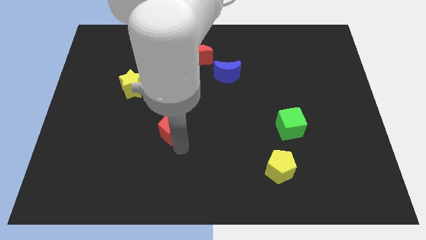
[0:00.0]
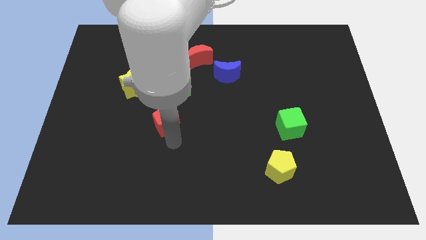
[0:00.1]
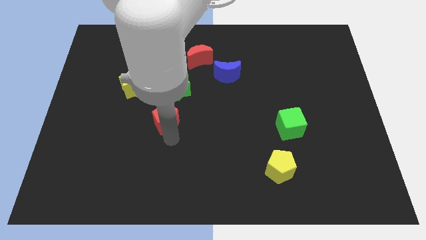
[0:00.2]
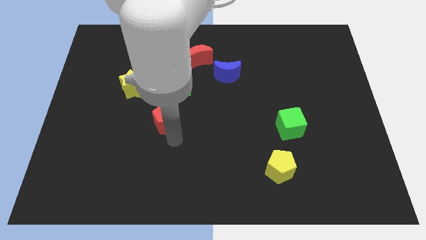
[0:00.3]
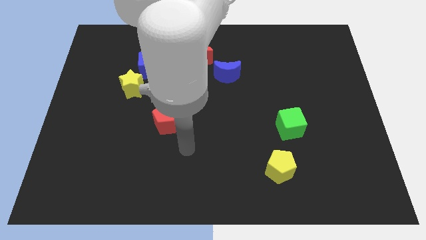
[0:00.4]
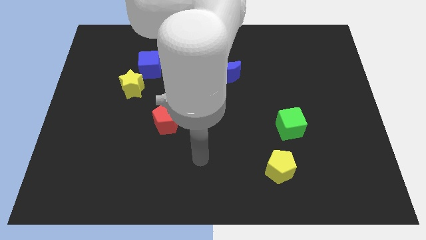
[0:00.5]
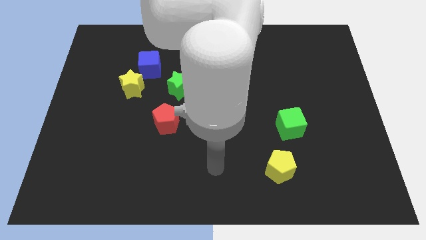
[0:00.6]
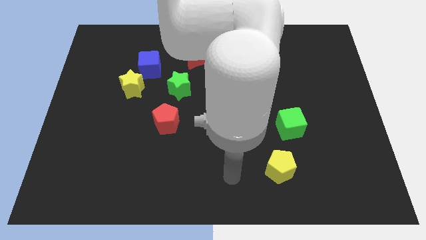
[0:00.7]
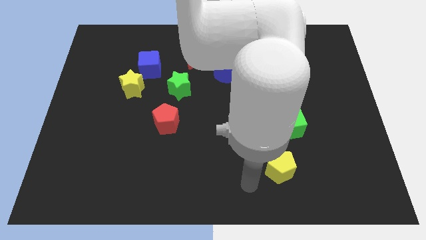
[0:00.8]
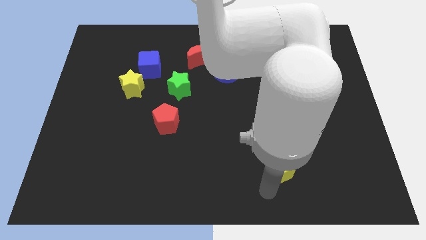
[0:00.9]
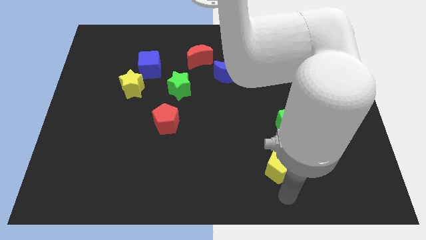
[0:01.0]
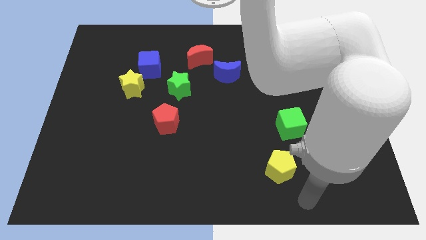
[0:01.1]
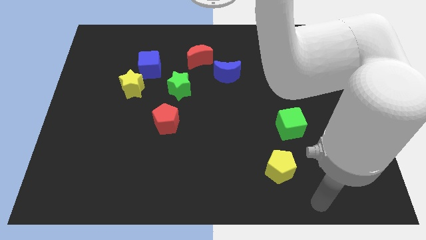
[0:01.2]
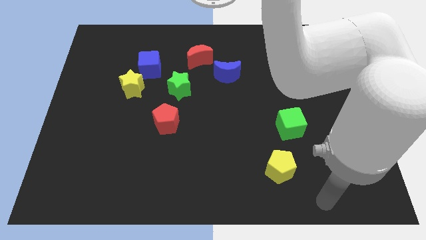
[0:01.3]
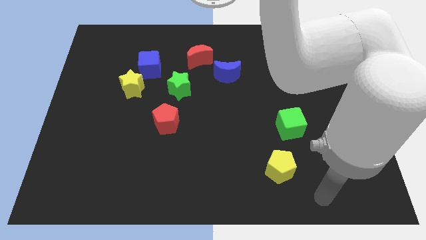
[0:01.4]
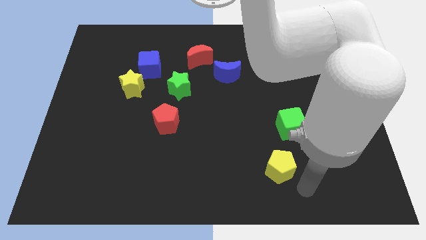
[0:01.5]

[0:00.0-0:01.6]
place the arm near the yellow pentagon

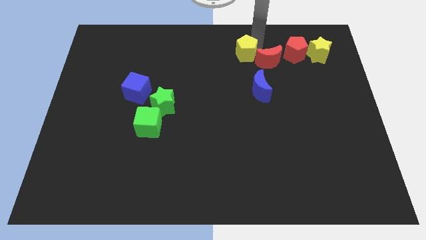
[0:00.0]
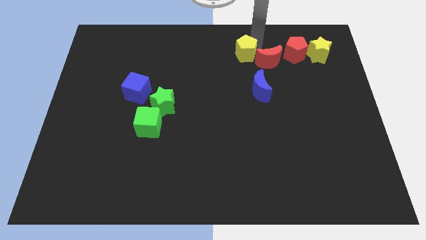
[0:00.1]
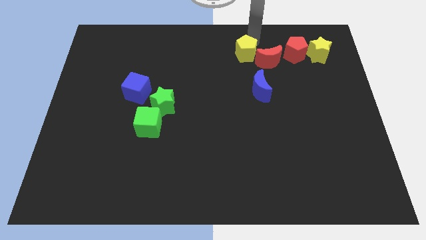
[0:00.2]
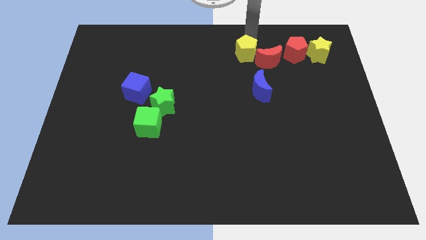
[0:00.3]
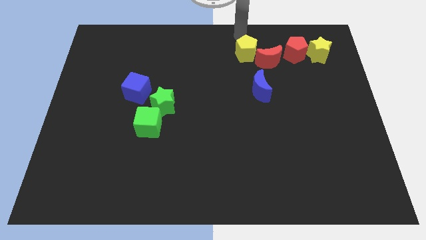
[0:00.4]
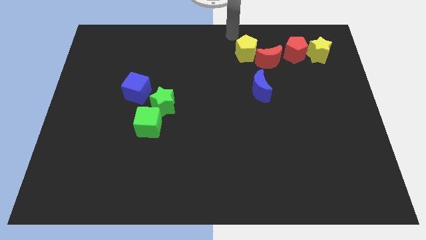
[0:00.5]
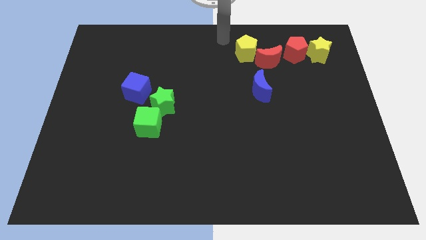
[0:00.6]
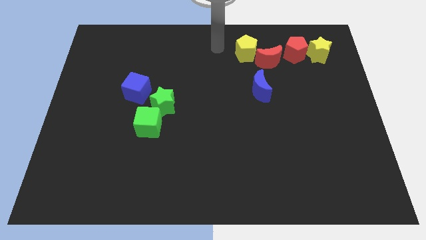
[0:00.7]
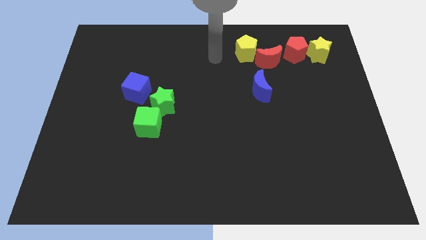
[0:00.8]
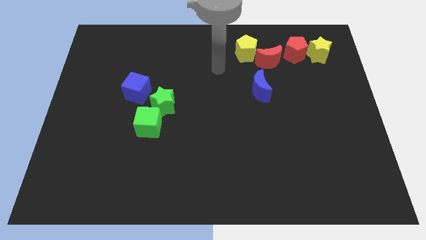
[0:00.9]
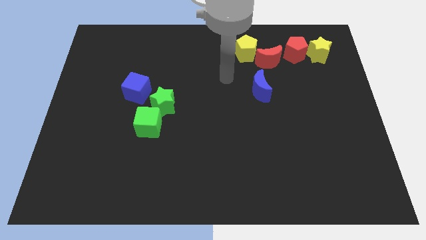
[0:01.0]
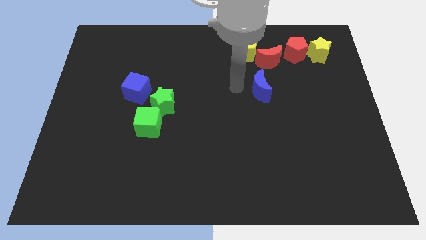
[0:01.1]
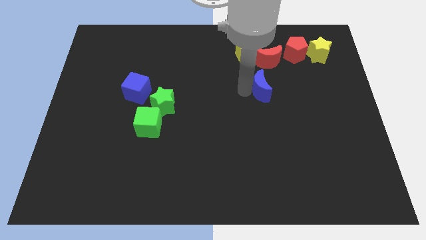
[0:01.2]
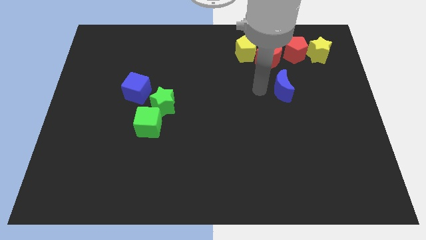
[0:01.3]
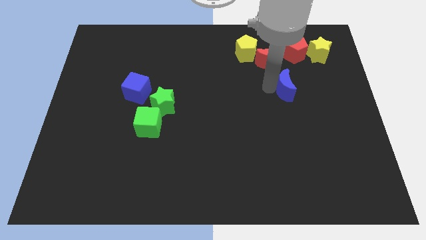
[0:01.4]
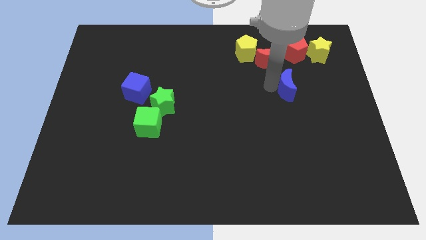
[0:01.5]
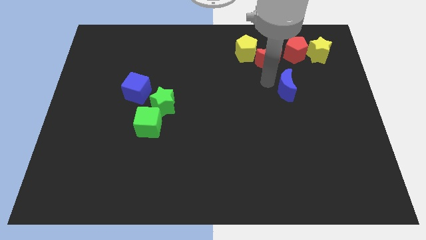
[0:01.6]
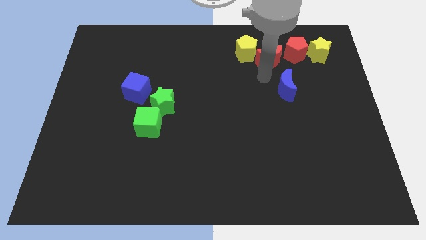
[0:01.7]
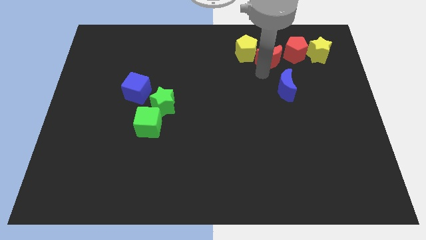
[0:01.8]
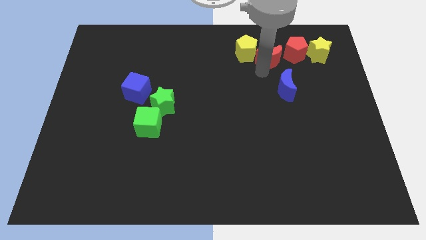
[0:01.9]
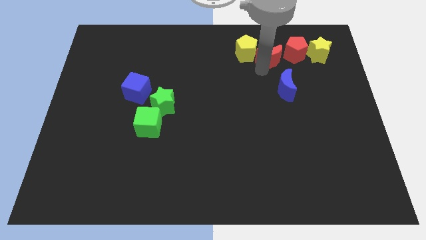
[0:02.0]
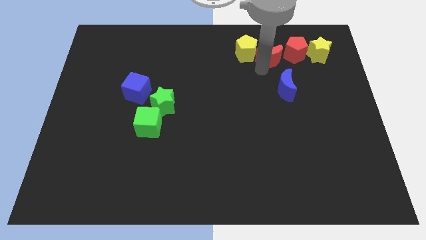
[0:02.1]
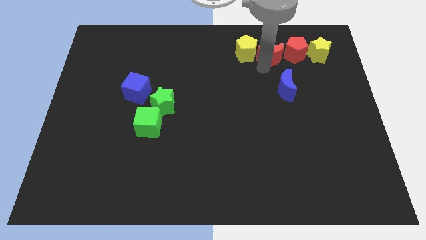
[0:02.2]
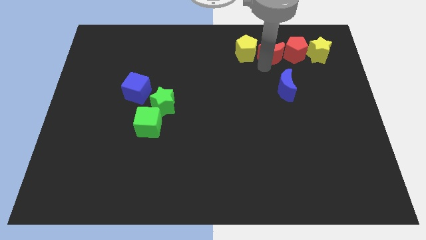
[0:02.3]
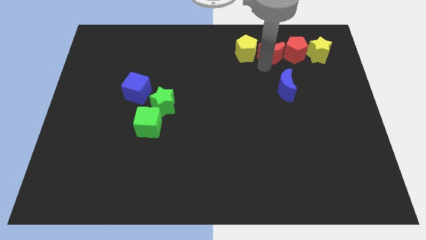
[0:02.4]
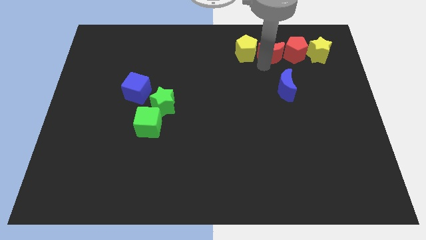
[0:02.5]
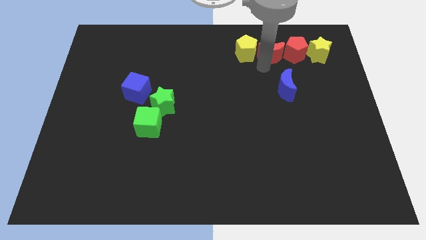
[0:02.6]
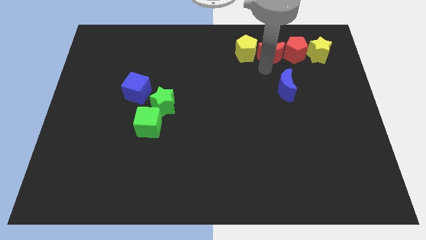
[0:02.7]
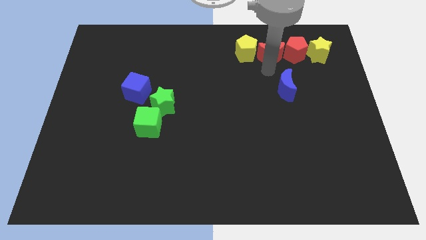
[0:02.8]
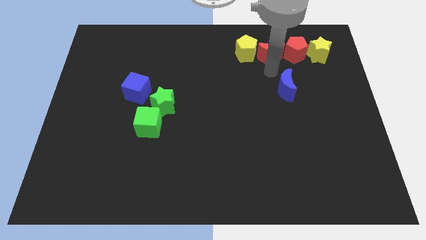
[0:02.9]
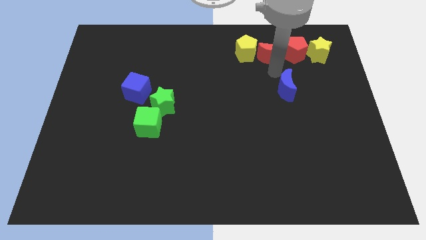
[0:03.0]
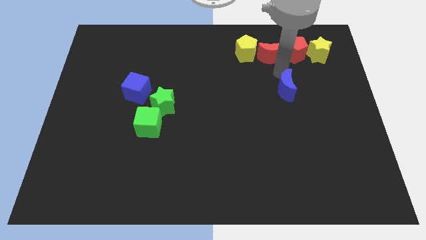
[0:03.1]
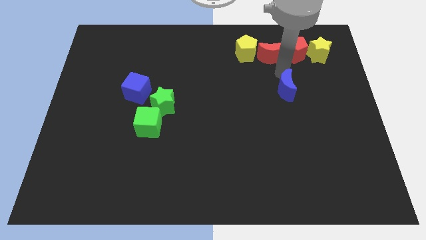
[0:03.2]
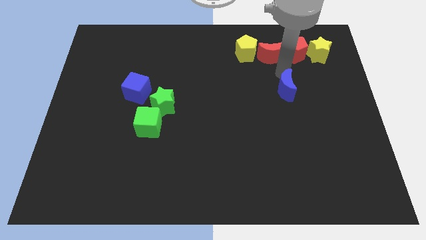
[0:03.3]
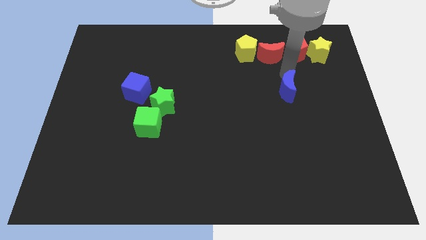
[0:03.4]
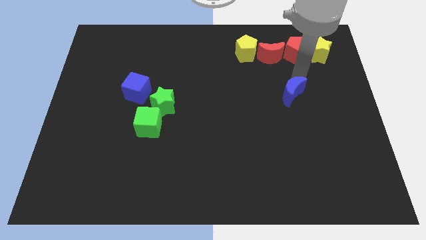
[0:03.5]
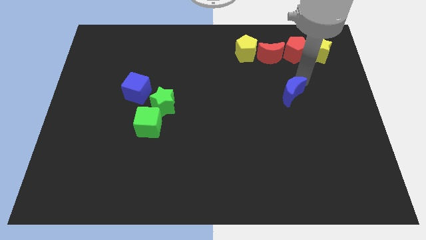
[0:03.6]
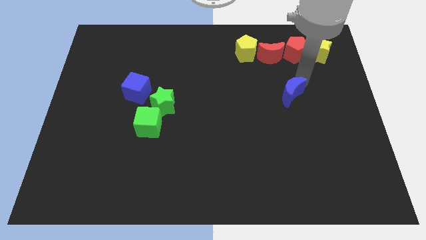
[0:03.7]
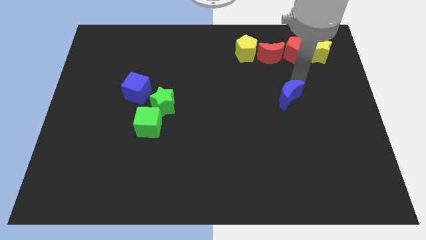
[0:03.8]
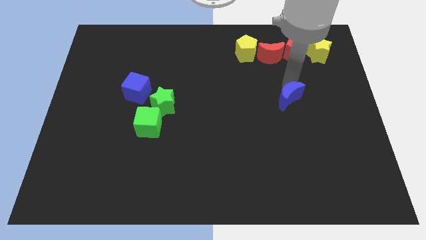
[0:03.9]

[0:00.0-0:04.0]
move blue moon slightly down

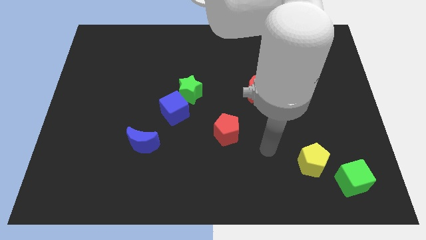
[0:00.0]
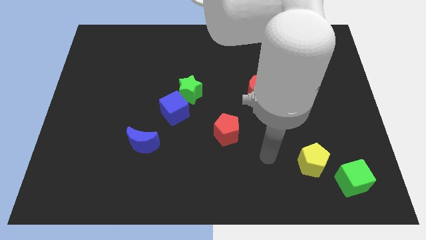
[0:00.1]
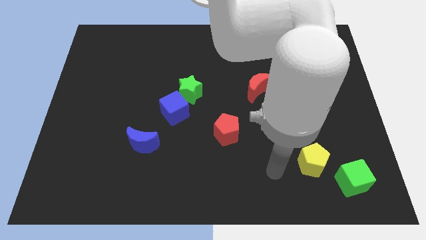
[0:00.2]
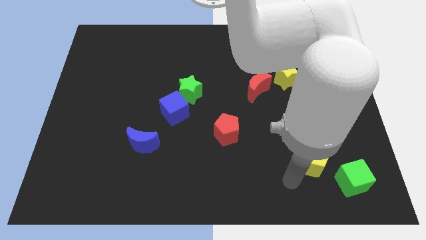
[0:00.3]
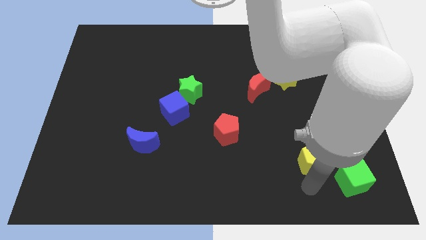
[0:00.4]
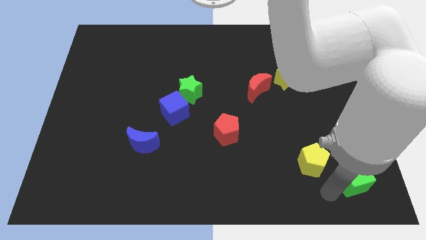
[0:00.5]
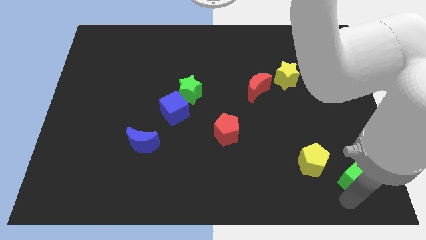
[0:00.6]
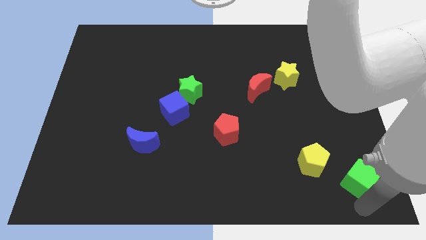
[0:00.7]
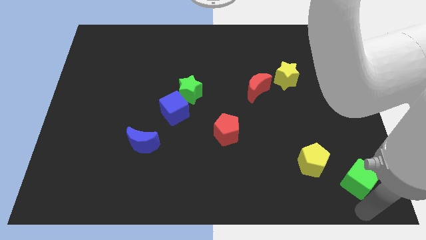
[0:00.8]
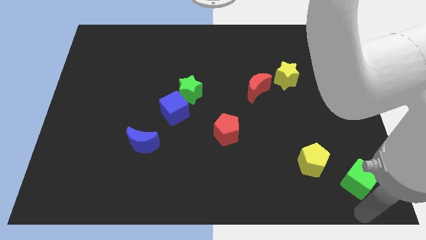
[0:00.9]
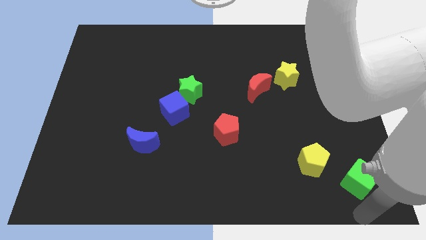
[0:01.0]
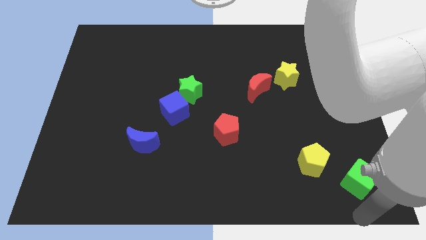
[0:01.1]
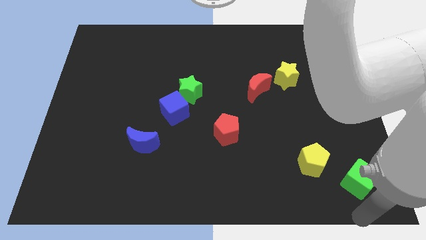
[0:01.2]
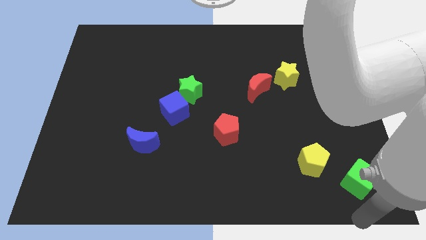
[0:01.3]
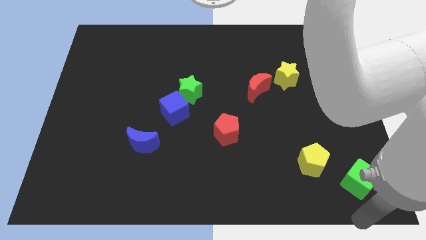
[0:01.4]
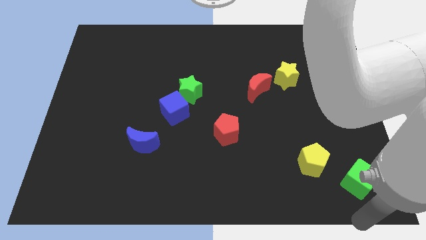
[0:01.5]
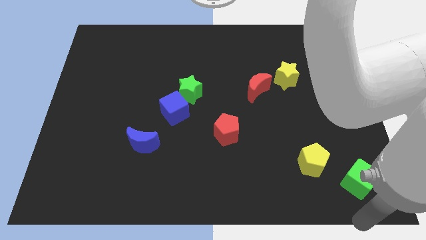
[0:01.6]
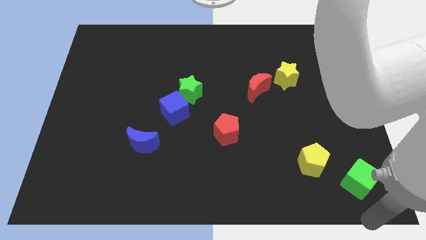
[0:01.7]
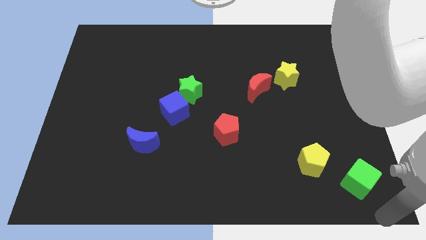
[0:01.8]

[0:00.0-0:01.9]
move the arm towards the bottom right corner of the board

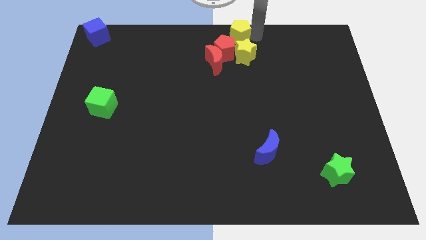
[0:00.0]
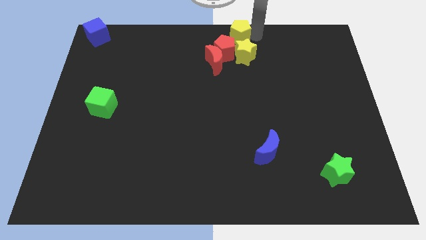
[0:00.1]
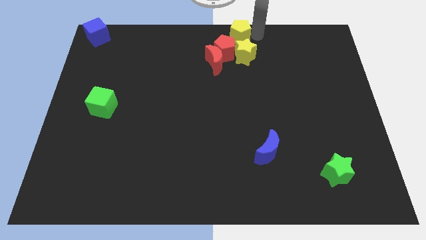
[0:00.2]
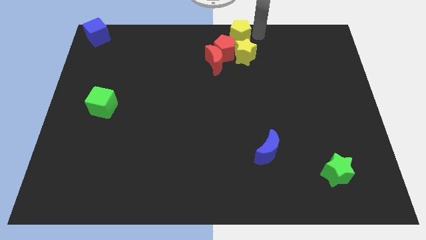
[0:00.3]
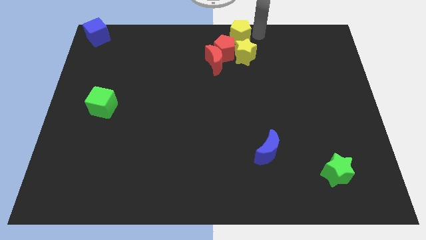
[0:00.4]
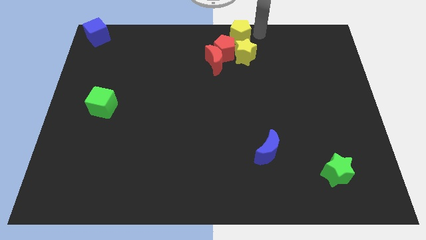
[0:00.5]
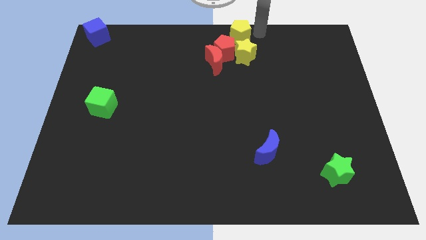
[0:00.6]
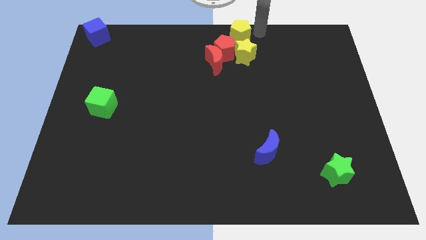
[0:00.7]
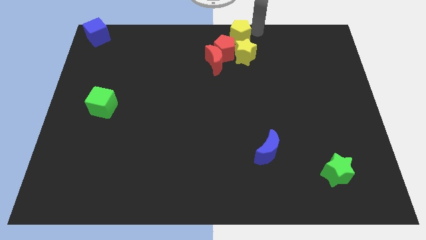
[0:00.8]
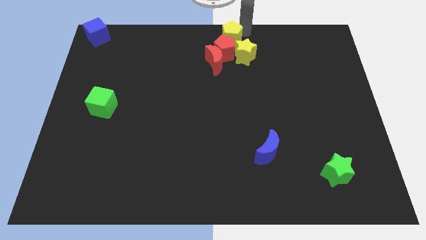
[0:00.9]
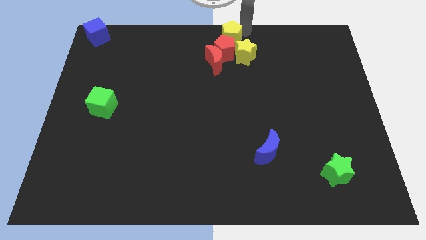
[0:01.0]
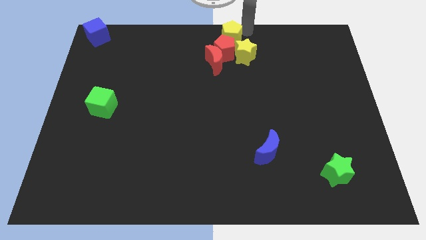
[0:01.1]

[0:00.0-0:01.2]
push the yellow pentagon above the red pentagon

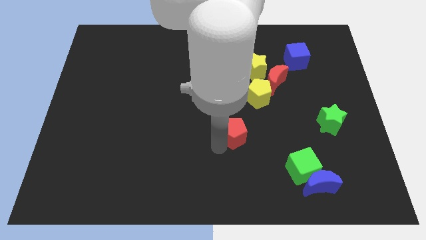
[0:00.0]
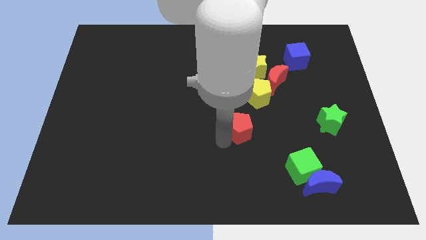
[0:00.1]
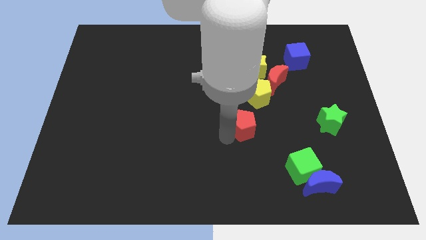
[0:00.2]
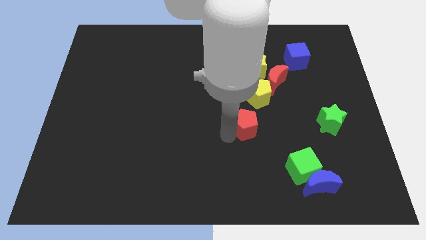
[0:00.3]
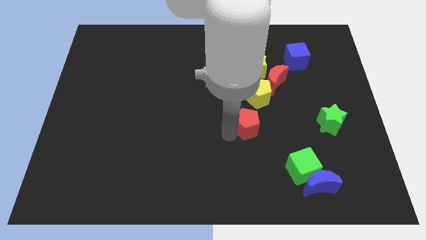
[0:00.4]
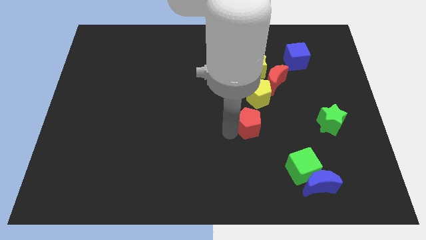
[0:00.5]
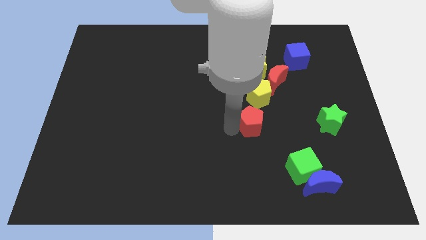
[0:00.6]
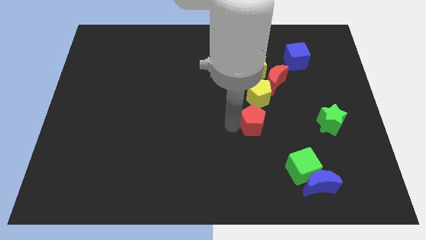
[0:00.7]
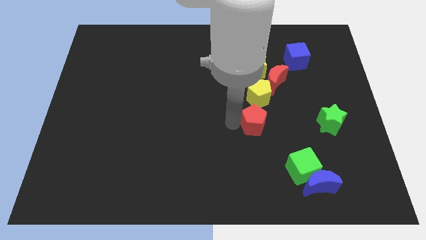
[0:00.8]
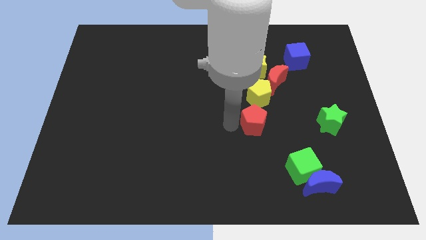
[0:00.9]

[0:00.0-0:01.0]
move the red pentagon slightly to the top of the board
